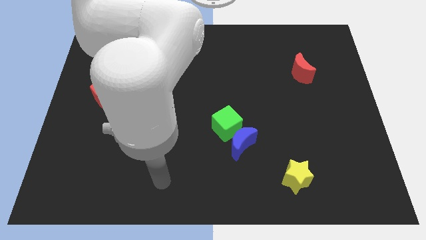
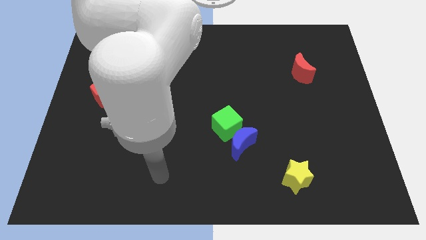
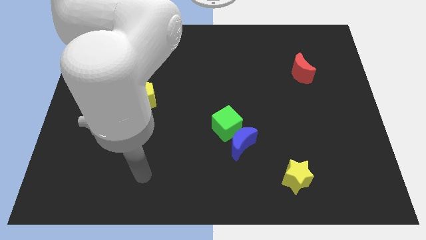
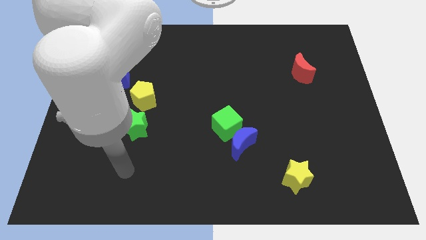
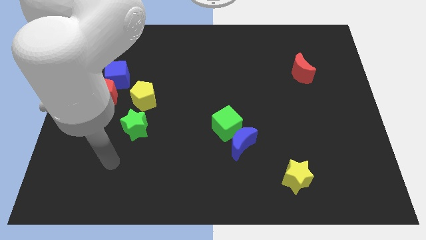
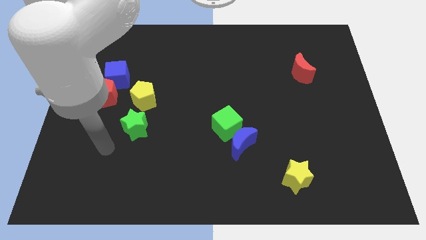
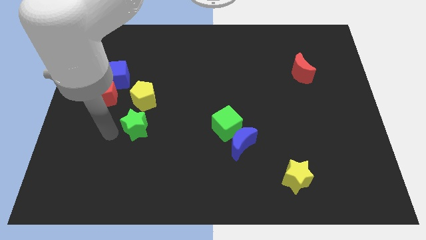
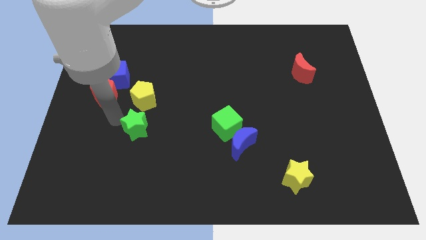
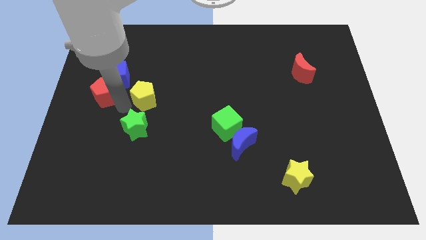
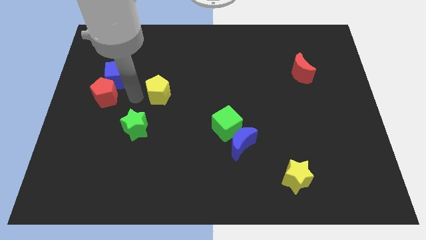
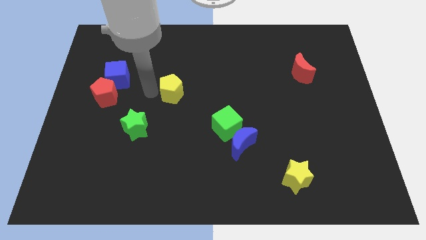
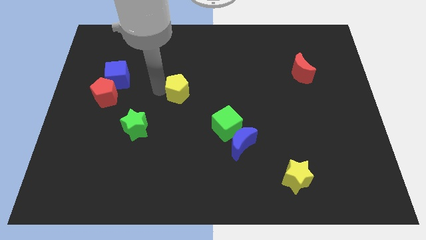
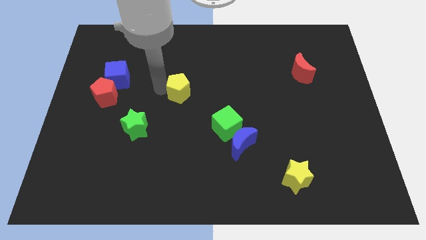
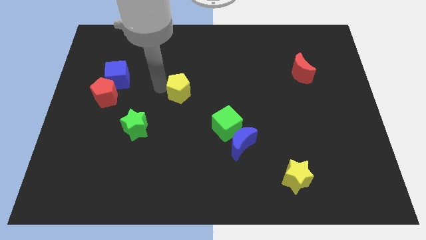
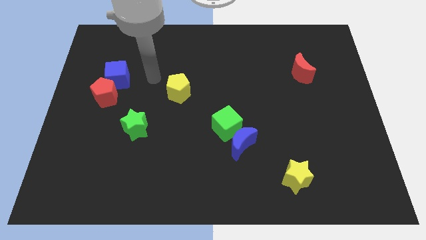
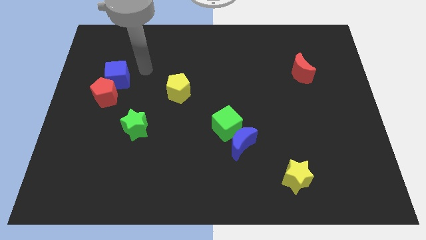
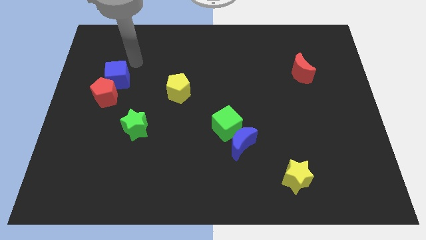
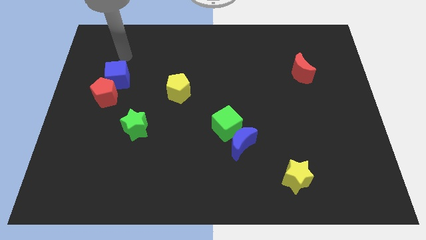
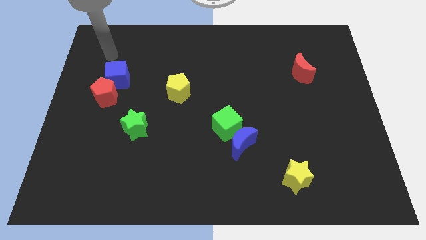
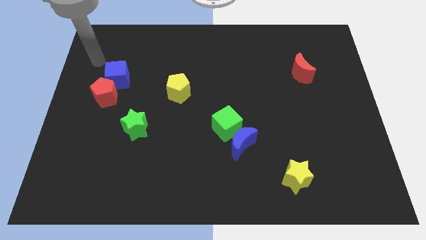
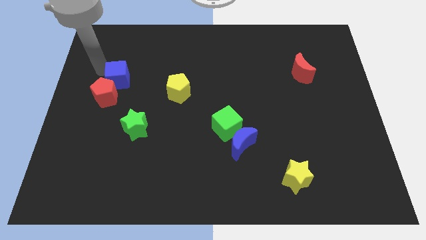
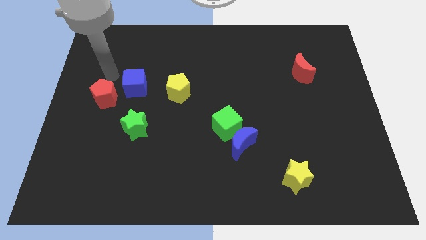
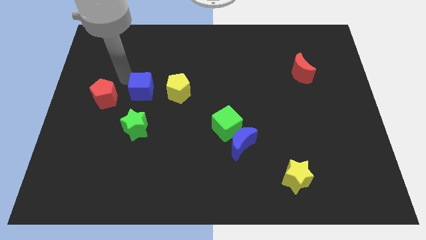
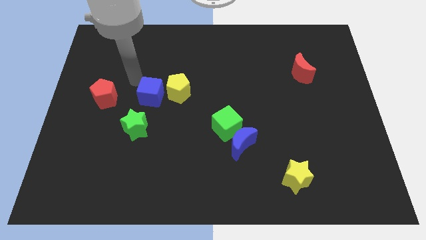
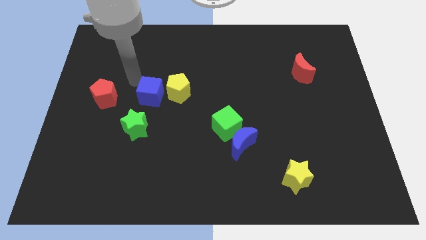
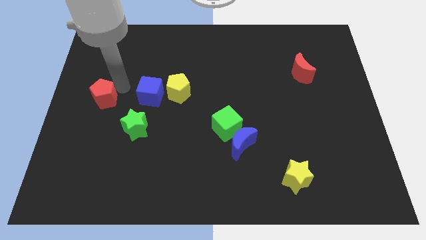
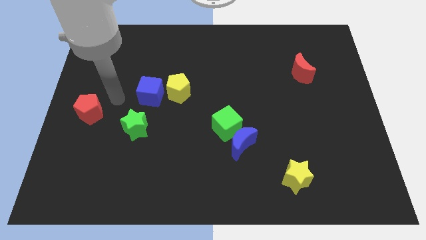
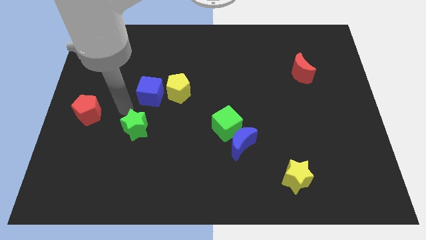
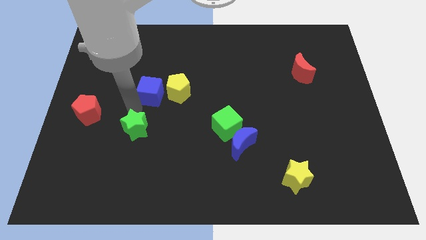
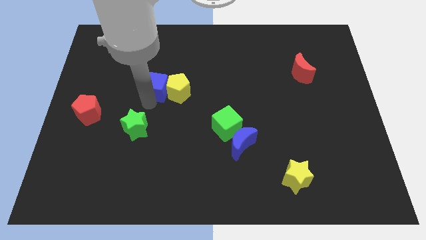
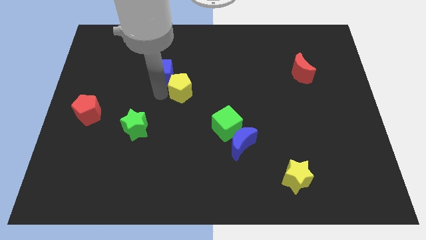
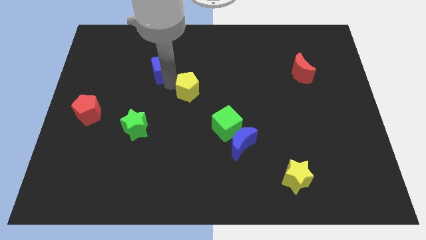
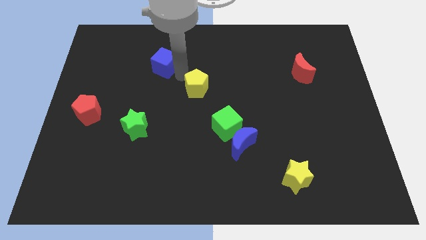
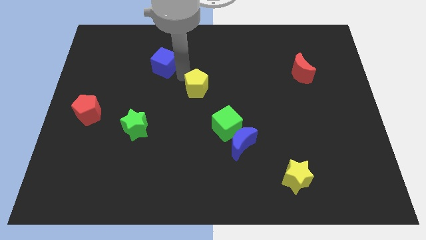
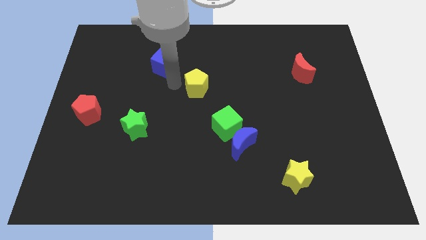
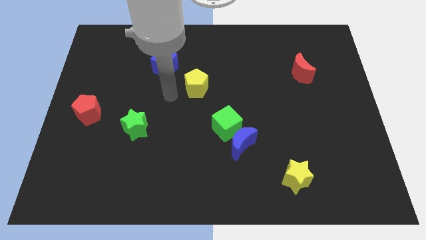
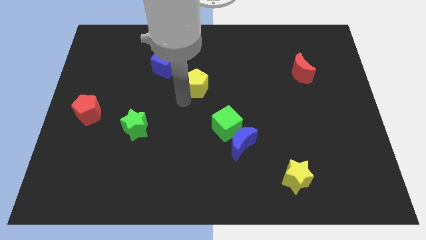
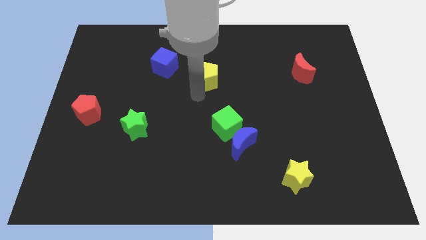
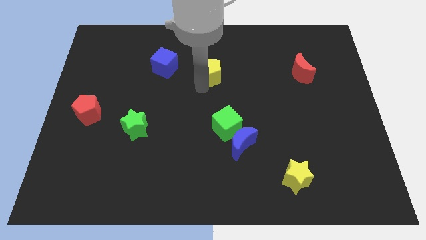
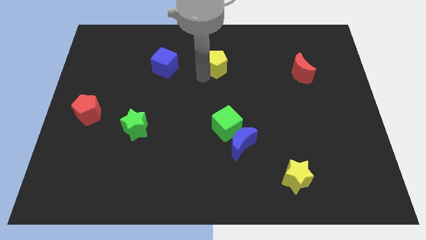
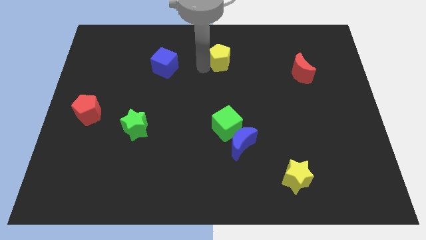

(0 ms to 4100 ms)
move the blue cube and yellow pentagon horizontal to each other

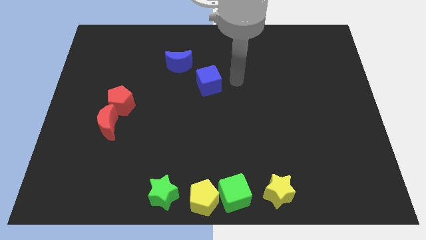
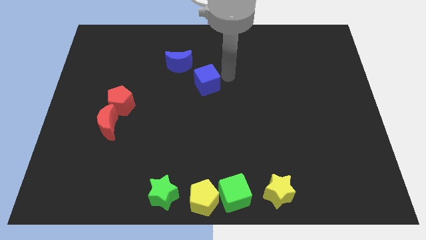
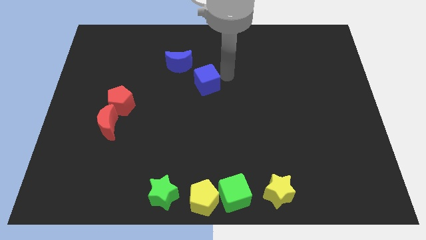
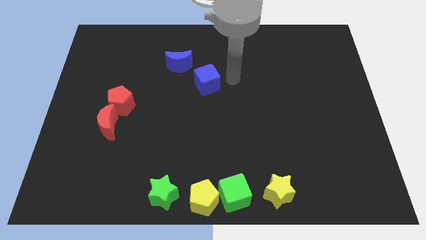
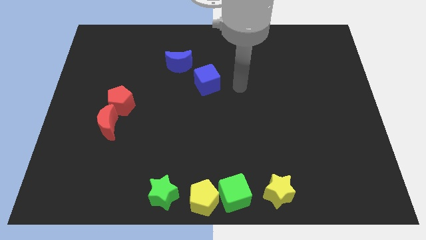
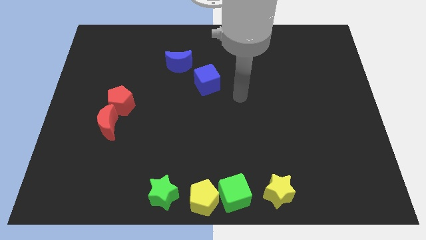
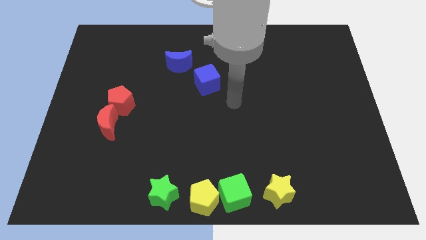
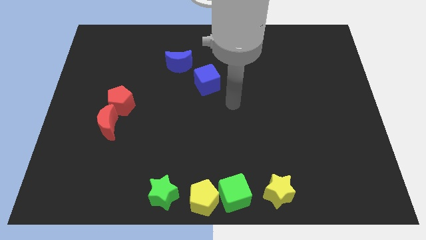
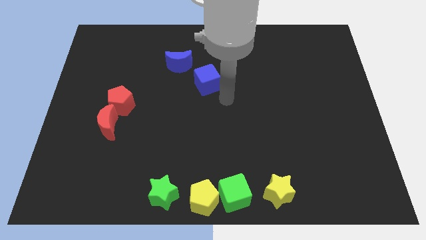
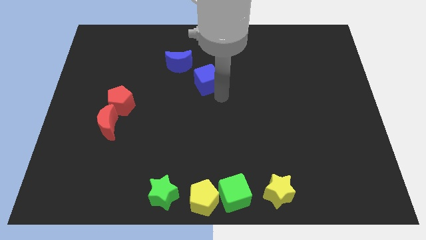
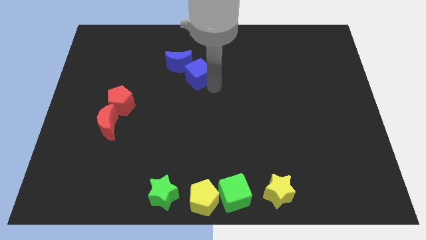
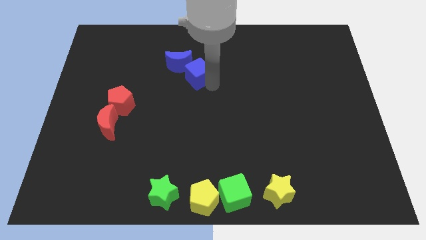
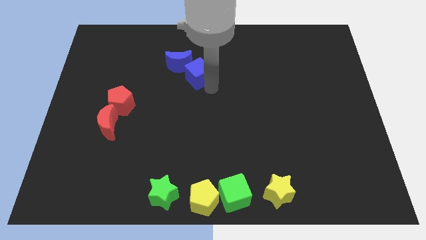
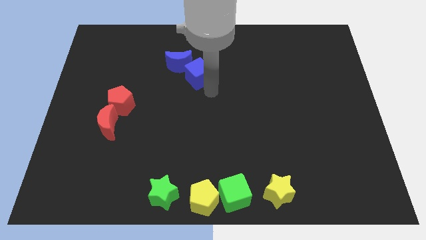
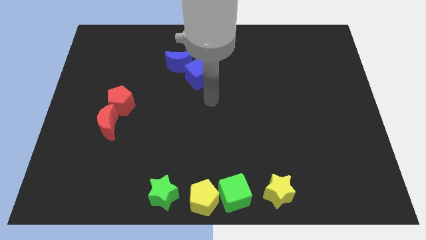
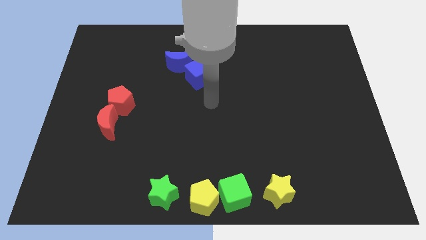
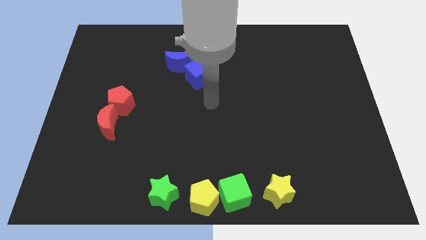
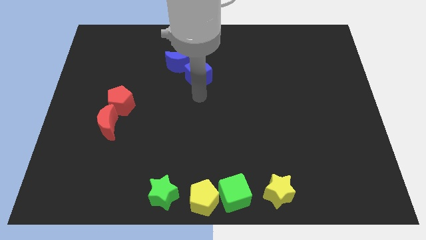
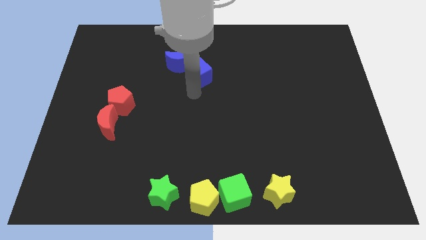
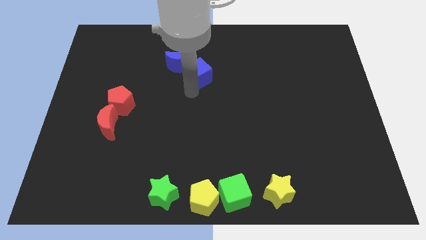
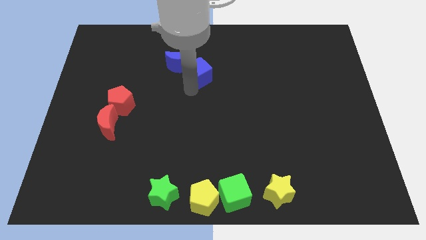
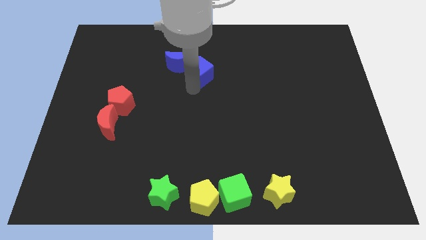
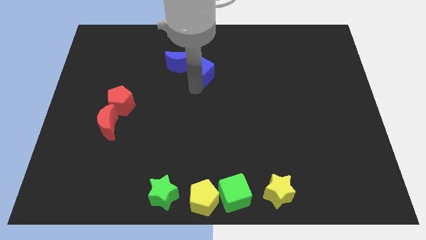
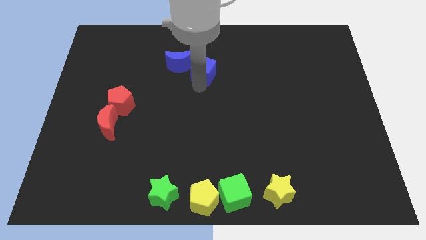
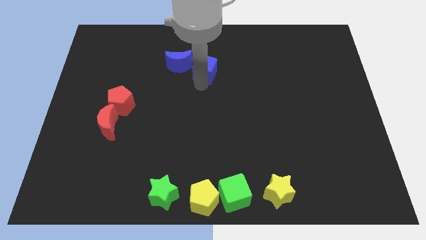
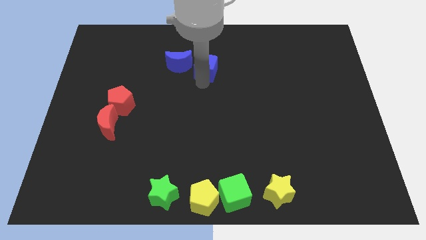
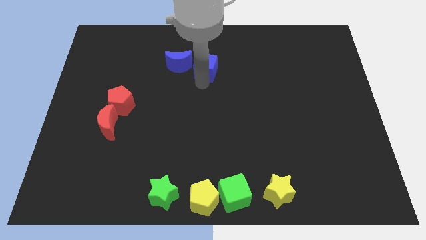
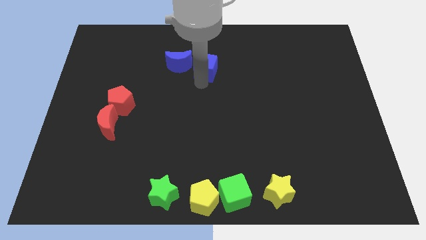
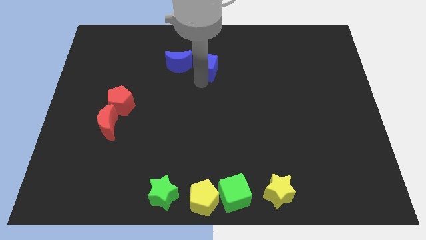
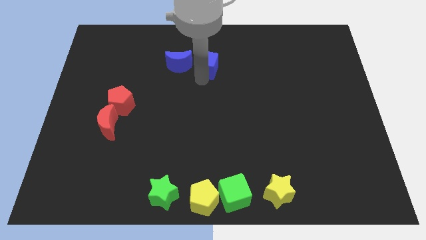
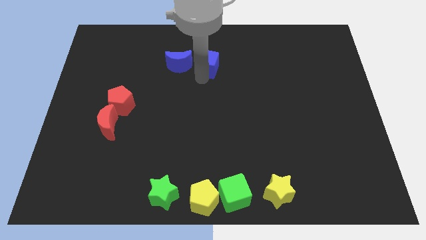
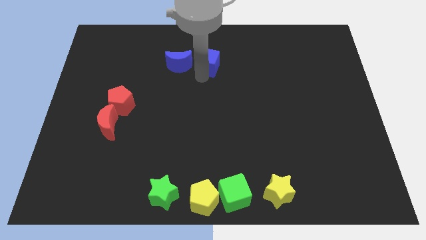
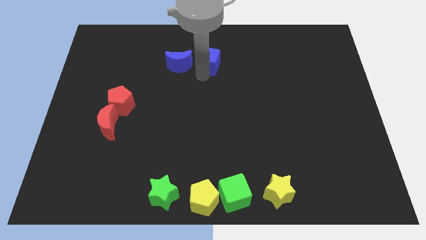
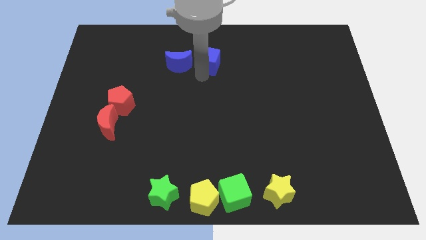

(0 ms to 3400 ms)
put the blue cube right to the blue crescent

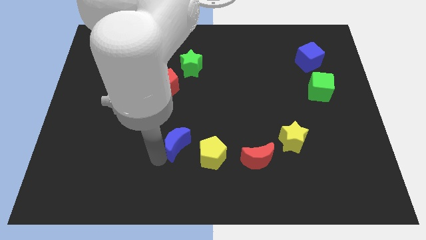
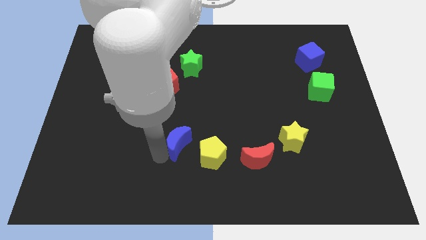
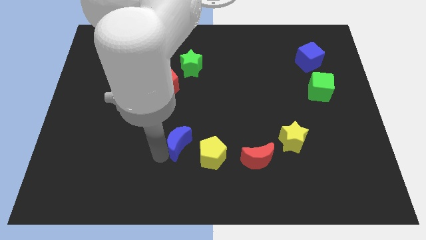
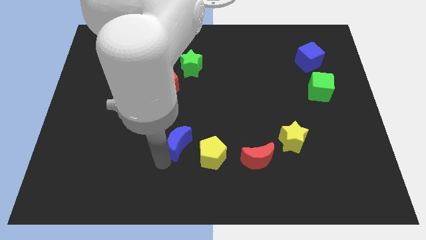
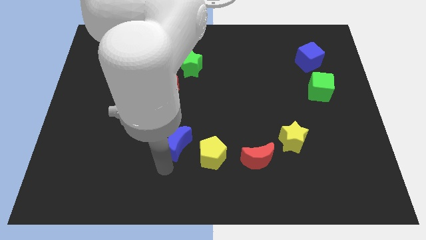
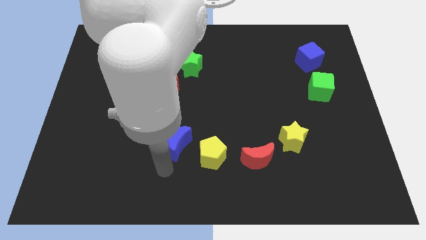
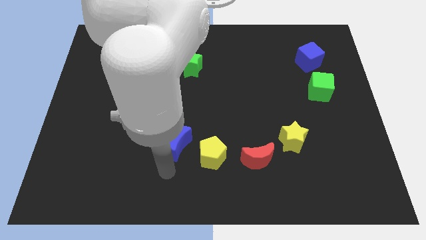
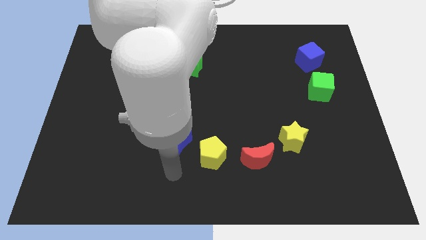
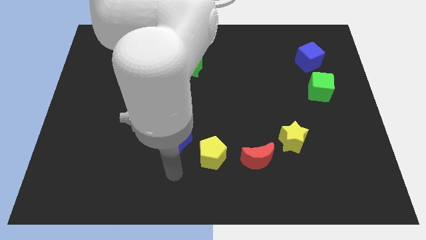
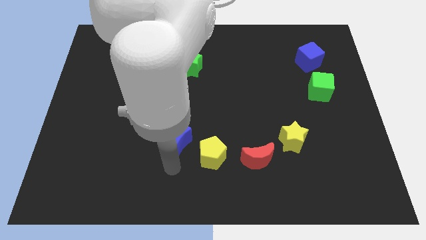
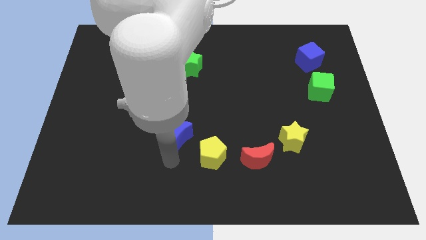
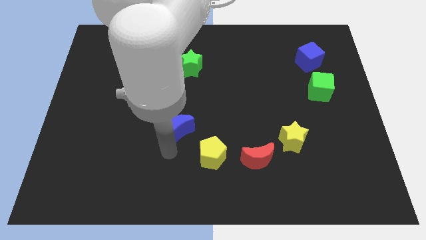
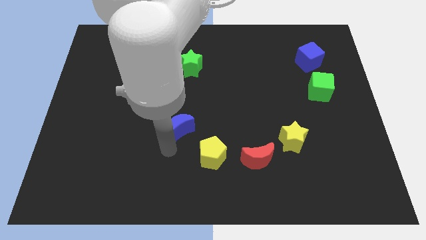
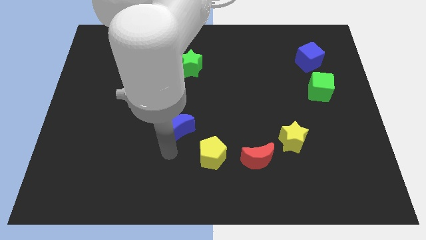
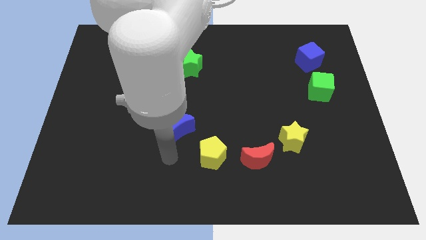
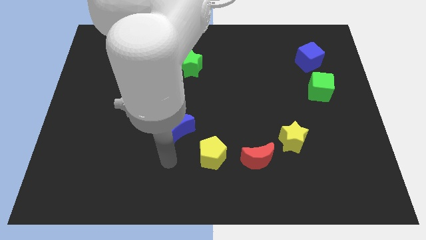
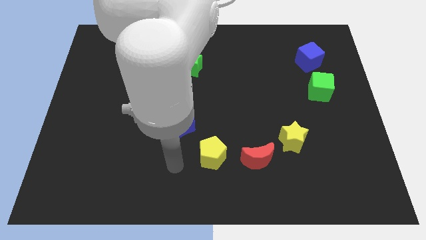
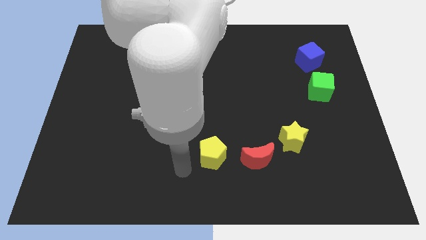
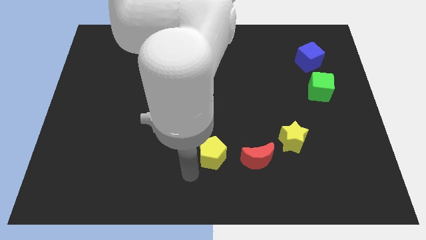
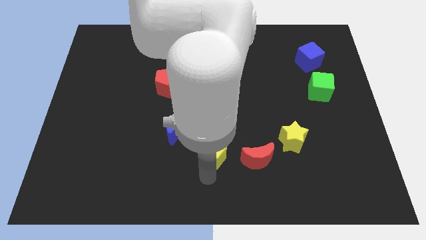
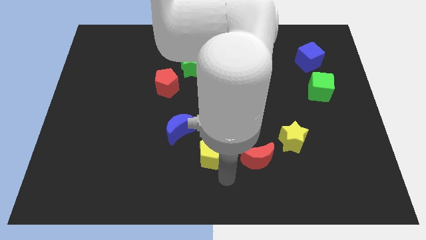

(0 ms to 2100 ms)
move the blue moon slightly to the top
